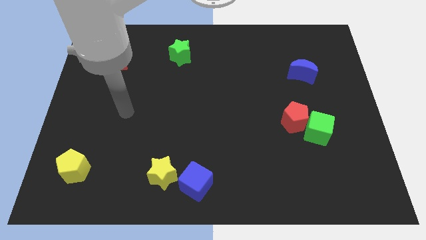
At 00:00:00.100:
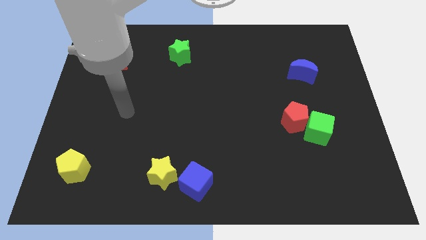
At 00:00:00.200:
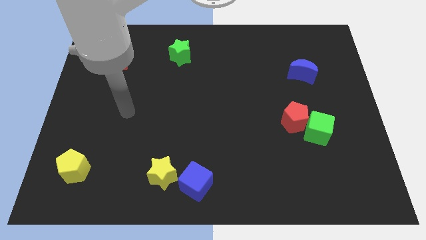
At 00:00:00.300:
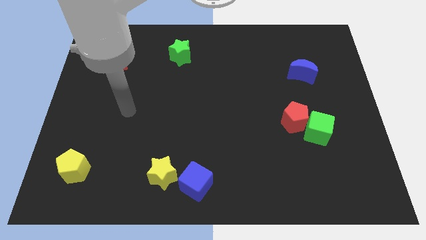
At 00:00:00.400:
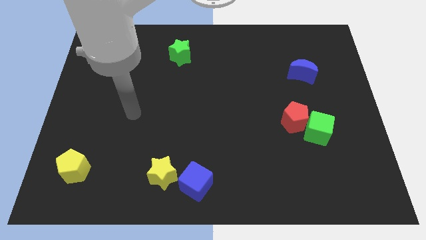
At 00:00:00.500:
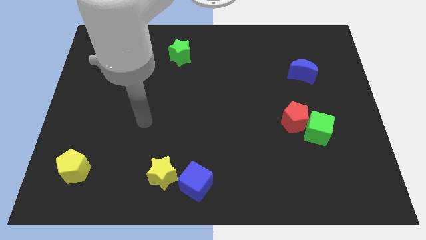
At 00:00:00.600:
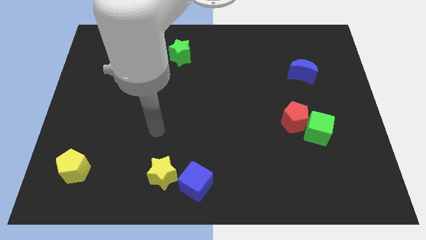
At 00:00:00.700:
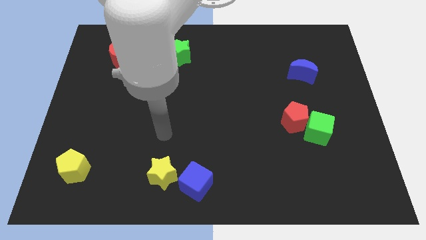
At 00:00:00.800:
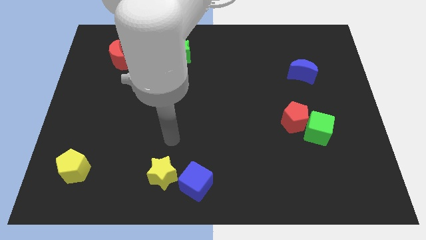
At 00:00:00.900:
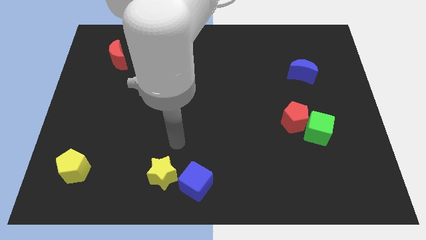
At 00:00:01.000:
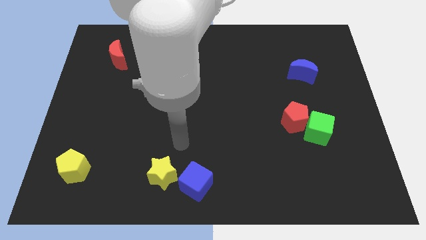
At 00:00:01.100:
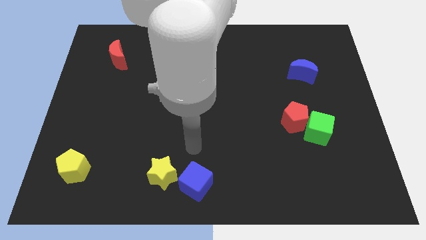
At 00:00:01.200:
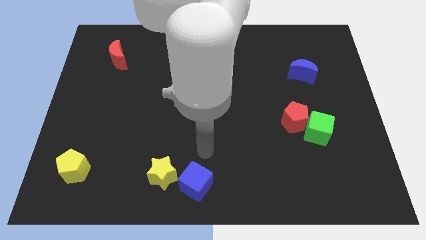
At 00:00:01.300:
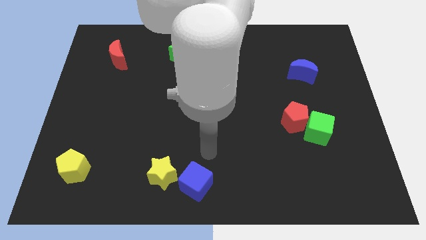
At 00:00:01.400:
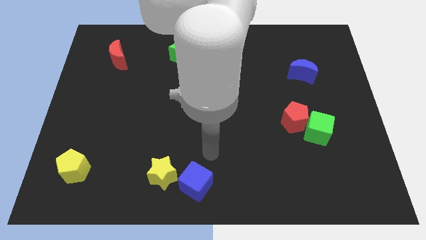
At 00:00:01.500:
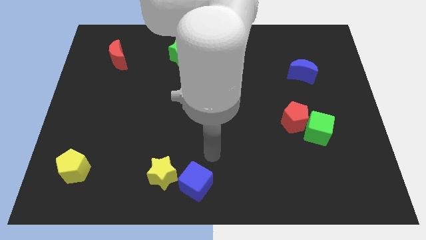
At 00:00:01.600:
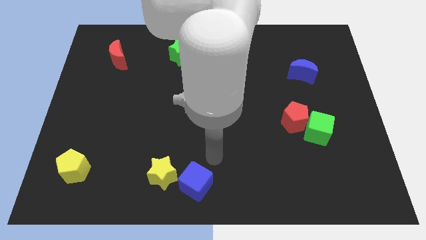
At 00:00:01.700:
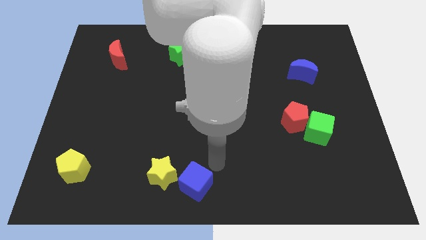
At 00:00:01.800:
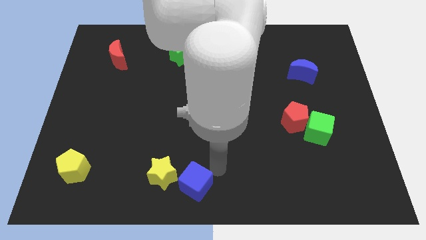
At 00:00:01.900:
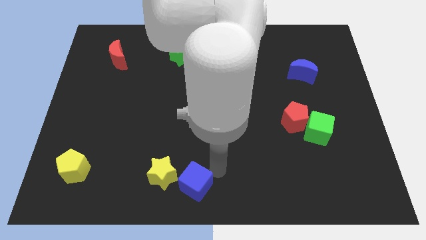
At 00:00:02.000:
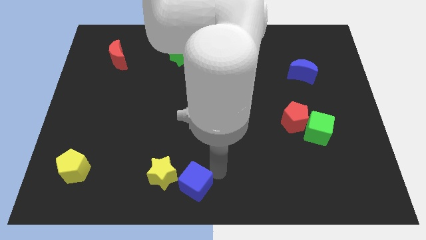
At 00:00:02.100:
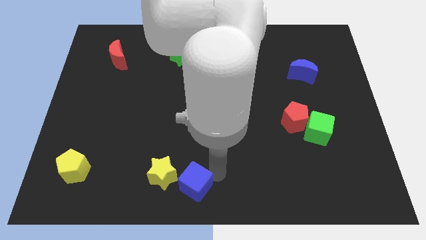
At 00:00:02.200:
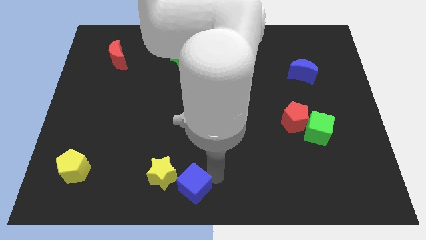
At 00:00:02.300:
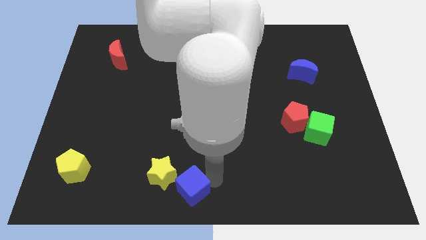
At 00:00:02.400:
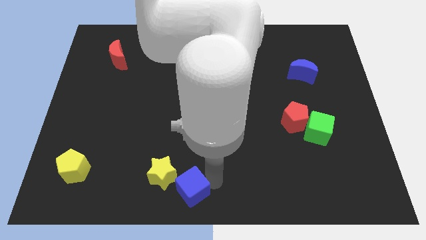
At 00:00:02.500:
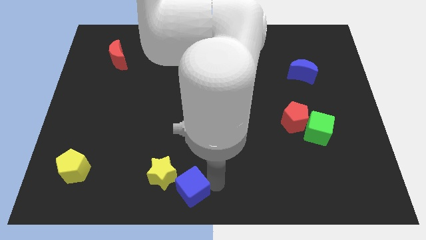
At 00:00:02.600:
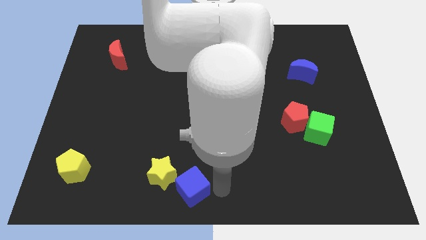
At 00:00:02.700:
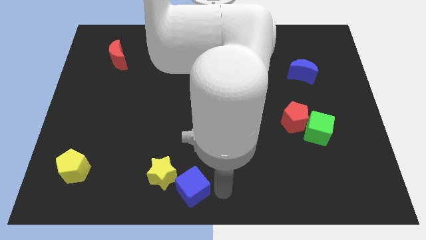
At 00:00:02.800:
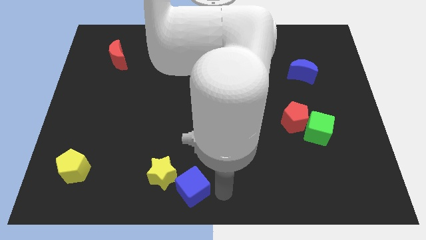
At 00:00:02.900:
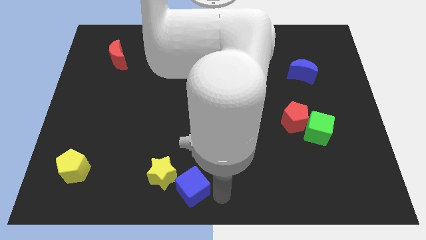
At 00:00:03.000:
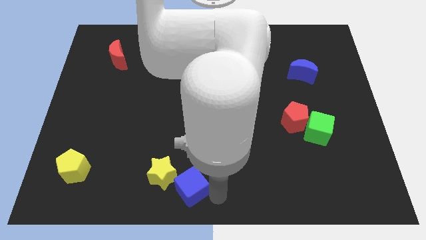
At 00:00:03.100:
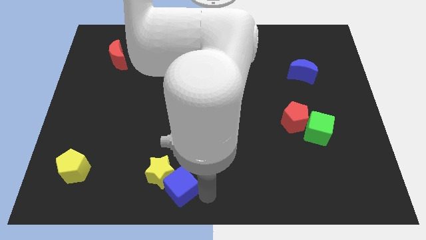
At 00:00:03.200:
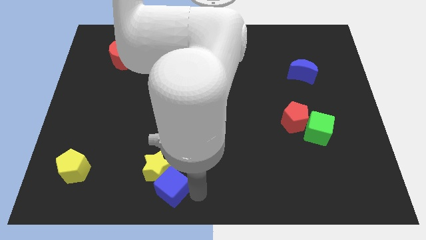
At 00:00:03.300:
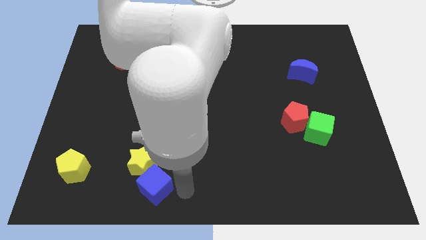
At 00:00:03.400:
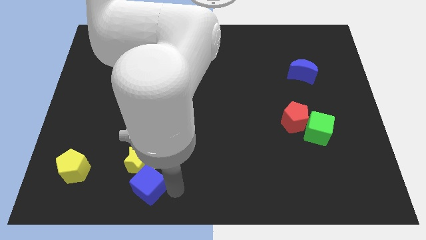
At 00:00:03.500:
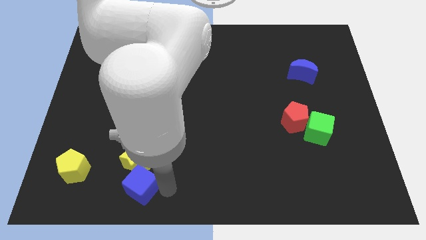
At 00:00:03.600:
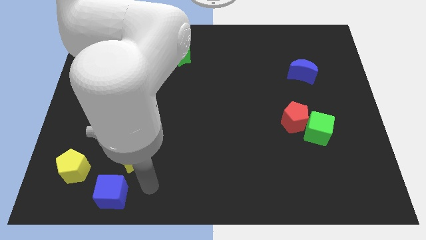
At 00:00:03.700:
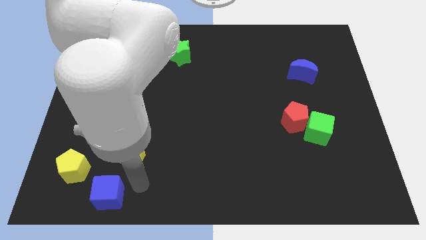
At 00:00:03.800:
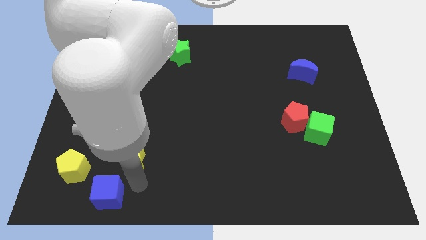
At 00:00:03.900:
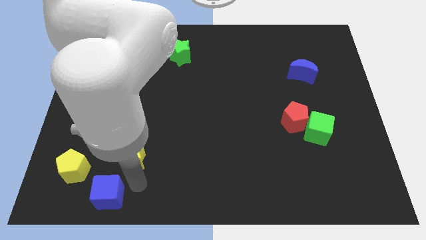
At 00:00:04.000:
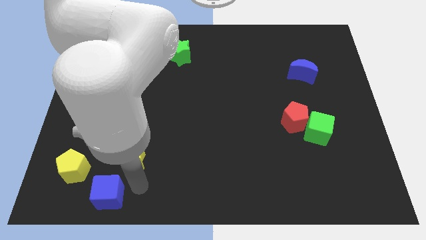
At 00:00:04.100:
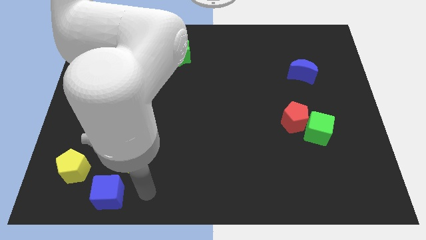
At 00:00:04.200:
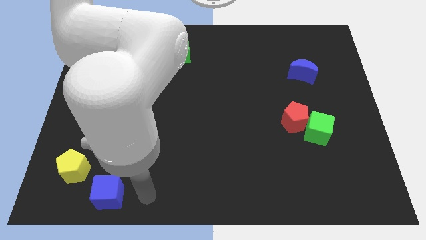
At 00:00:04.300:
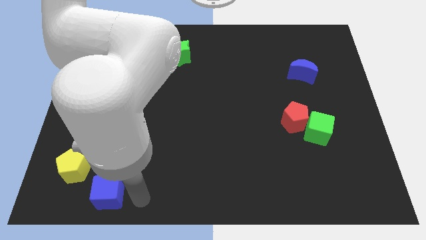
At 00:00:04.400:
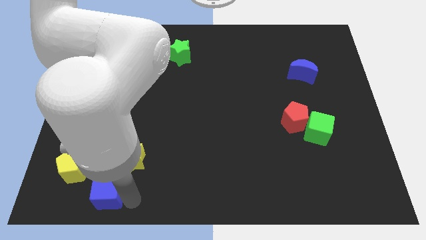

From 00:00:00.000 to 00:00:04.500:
move the blue cube towards the left side of the board

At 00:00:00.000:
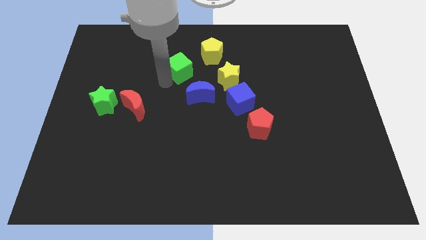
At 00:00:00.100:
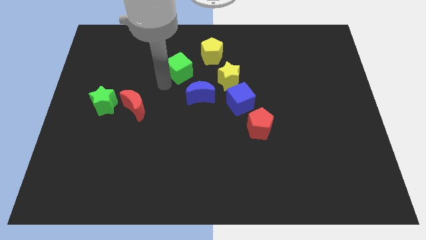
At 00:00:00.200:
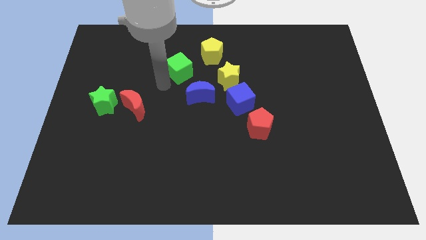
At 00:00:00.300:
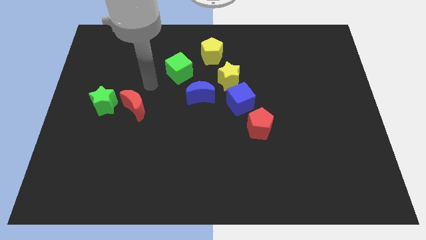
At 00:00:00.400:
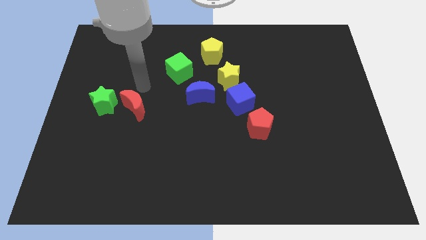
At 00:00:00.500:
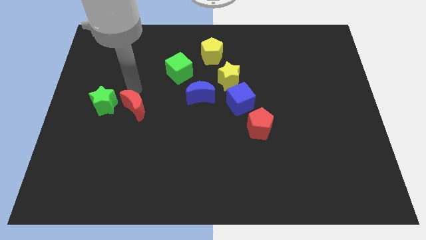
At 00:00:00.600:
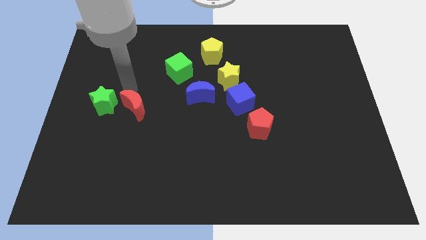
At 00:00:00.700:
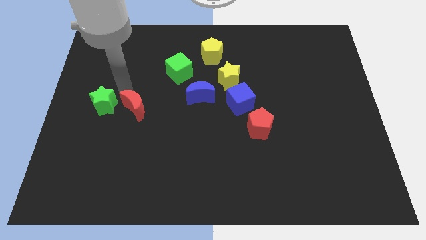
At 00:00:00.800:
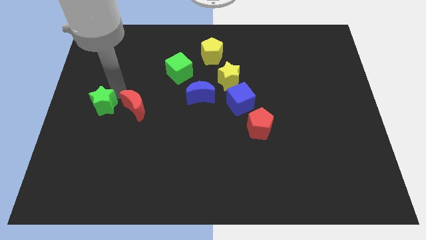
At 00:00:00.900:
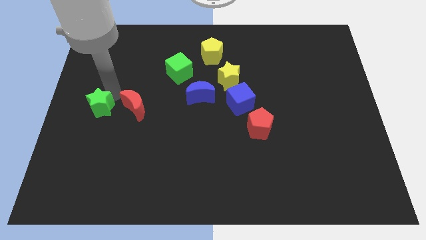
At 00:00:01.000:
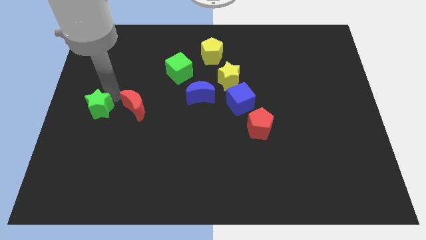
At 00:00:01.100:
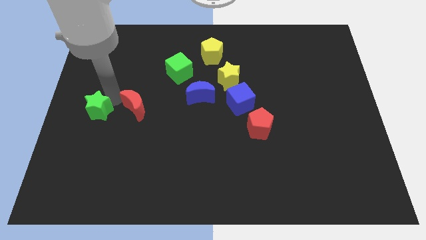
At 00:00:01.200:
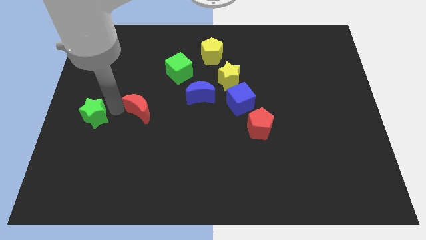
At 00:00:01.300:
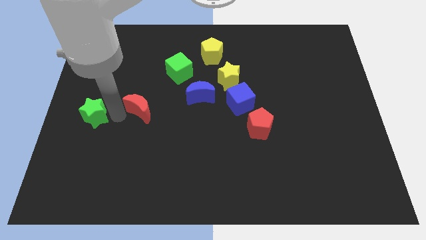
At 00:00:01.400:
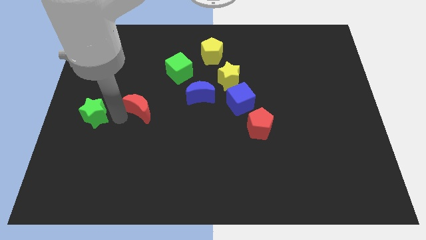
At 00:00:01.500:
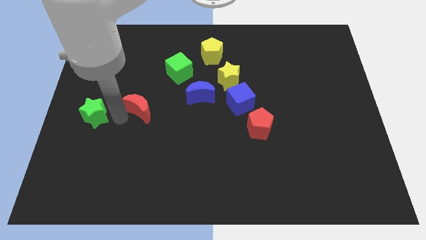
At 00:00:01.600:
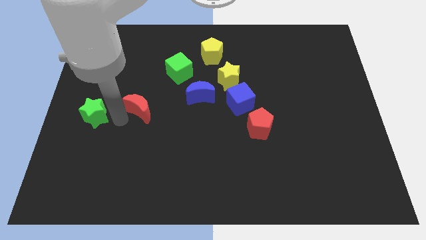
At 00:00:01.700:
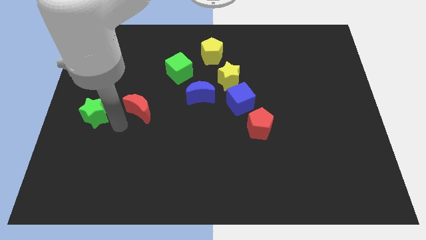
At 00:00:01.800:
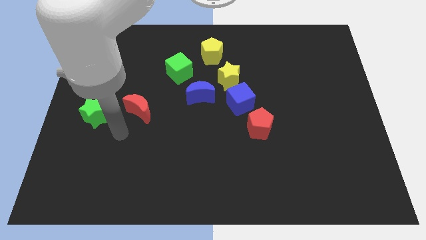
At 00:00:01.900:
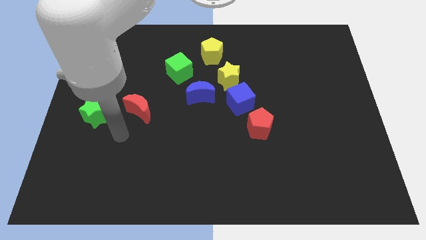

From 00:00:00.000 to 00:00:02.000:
move the green star and red moon

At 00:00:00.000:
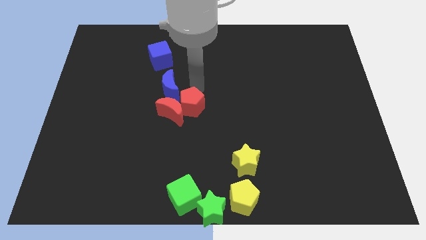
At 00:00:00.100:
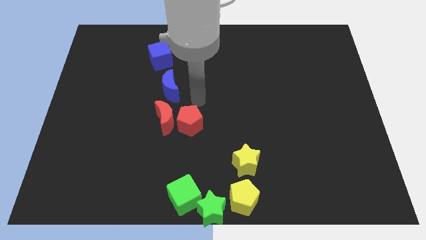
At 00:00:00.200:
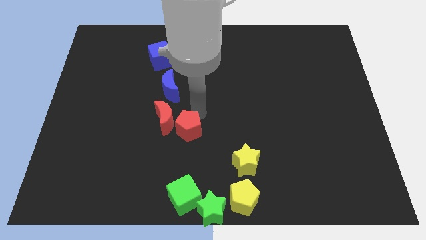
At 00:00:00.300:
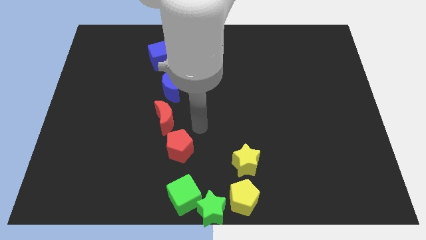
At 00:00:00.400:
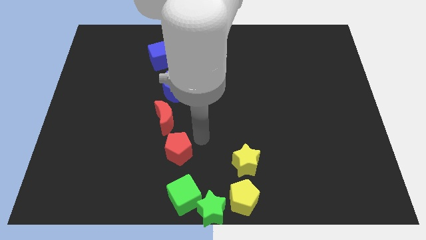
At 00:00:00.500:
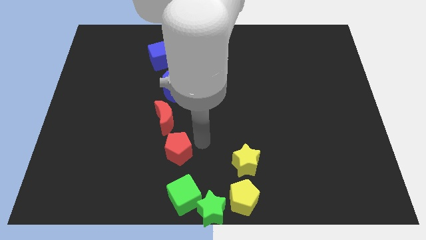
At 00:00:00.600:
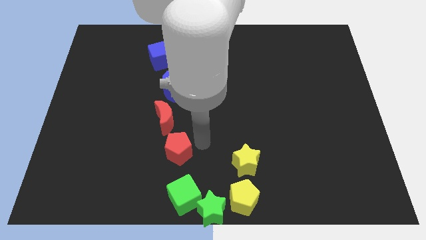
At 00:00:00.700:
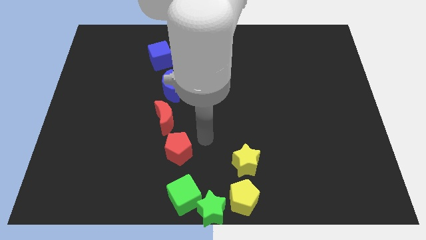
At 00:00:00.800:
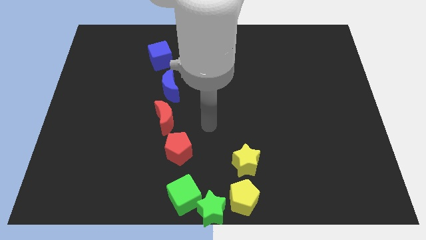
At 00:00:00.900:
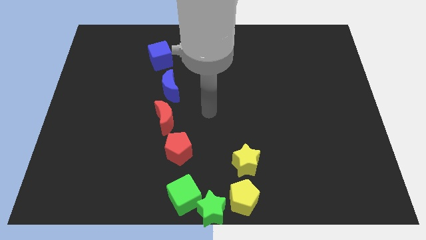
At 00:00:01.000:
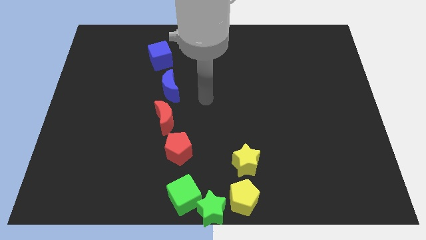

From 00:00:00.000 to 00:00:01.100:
put the red pentagon to the left of the yellow star

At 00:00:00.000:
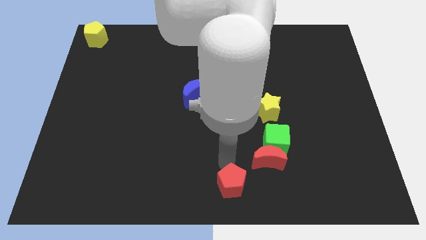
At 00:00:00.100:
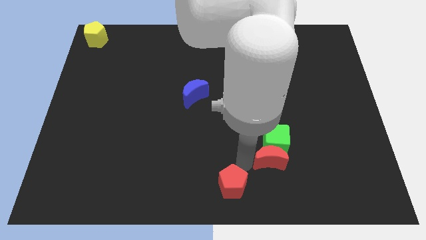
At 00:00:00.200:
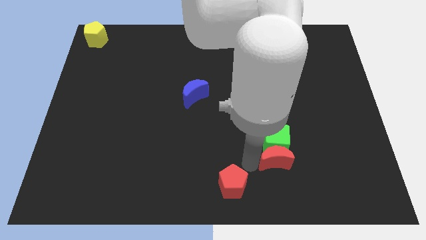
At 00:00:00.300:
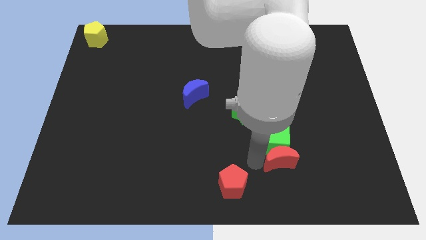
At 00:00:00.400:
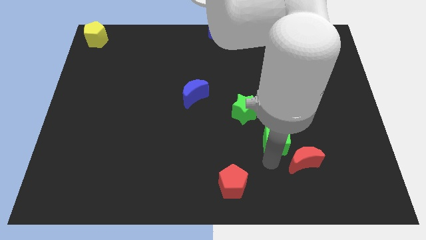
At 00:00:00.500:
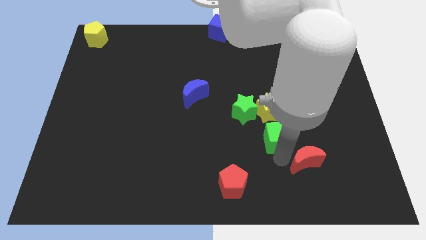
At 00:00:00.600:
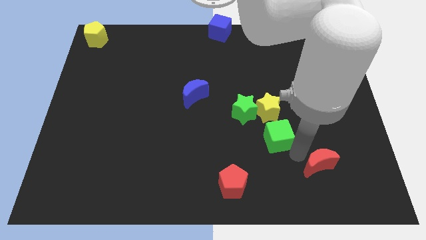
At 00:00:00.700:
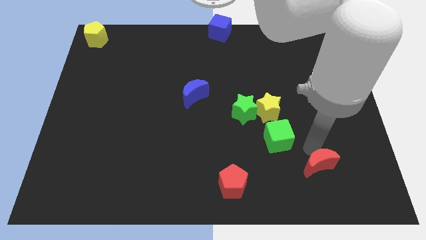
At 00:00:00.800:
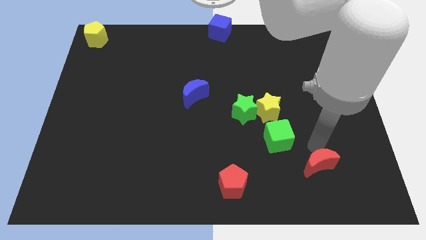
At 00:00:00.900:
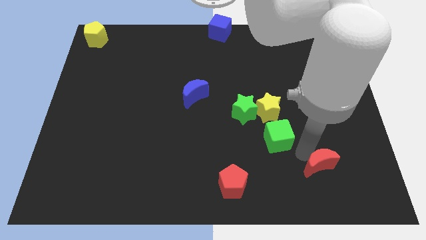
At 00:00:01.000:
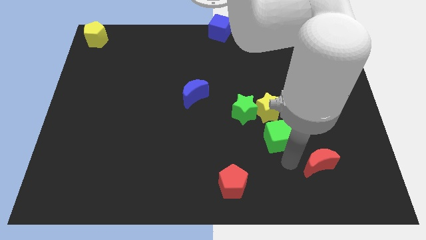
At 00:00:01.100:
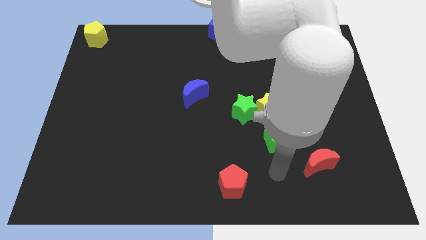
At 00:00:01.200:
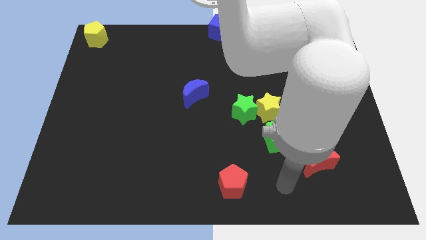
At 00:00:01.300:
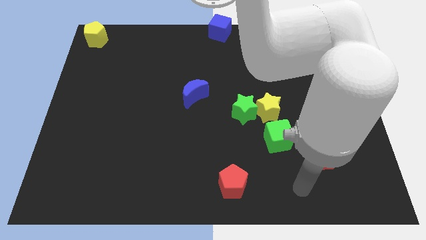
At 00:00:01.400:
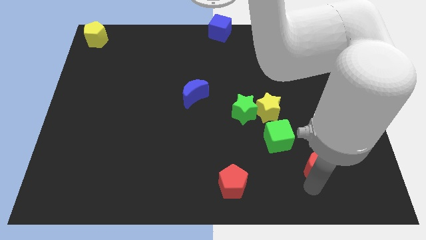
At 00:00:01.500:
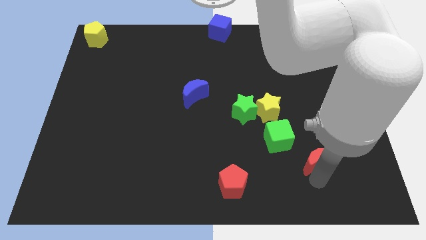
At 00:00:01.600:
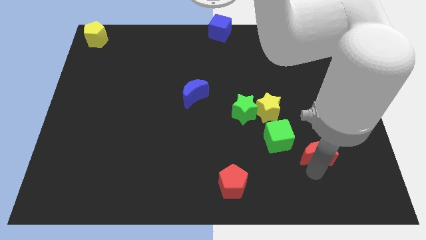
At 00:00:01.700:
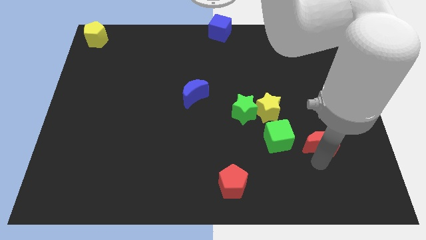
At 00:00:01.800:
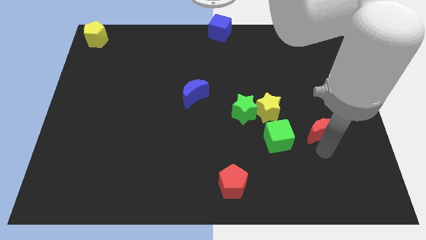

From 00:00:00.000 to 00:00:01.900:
move the red moon to the right of the green cube
